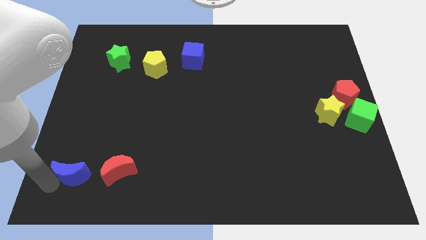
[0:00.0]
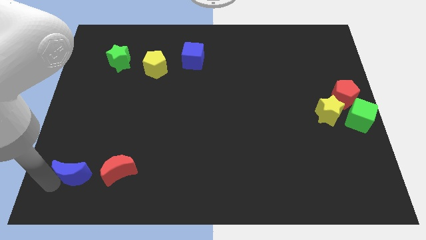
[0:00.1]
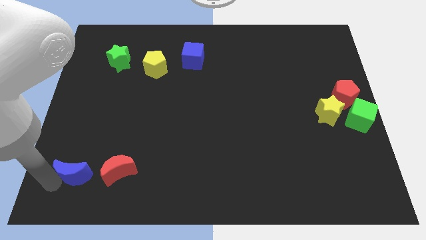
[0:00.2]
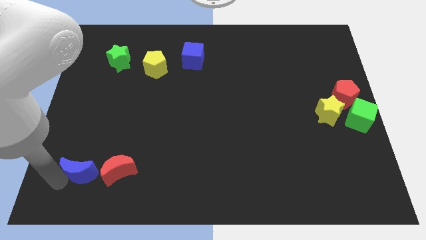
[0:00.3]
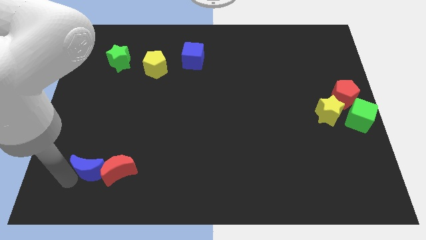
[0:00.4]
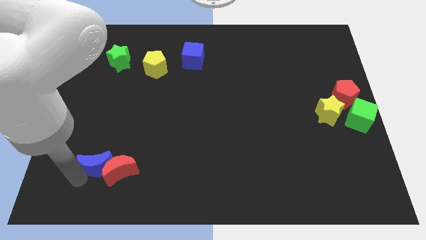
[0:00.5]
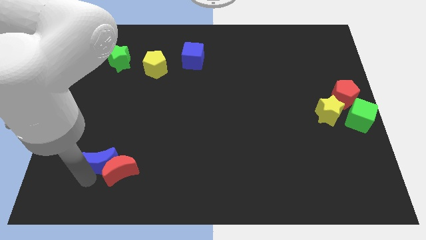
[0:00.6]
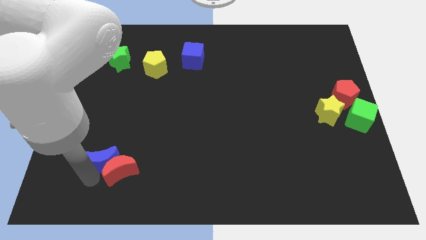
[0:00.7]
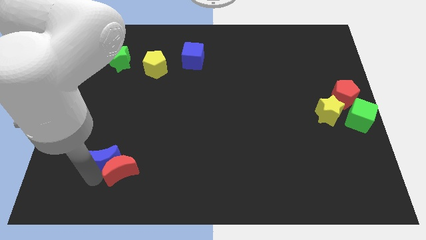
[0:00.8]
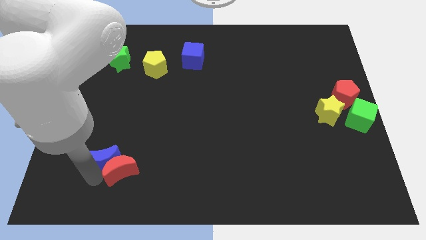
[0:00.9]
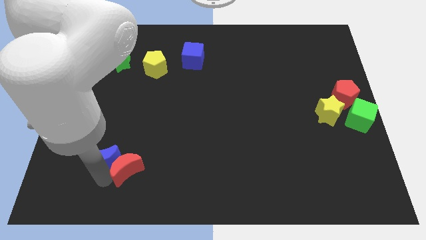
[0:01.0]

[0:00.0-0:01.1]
move the blue moon to the top side of the red moon

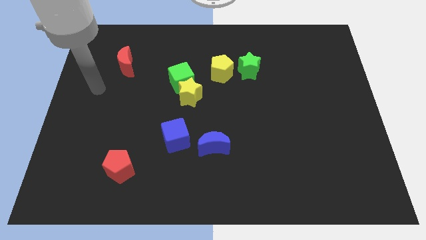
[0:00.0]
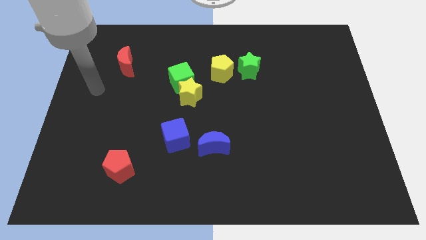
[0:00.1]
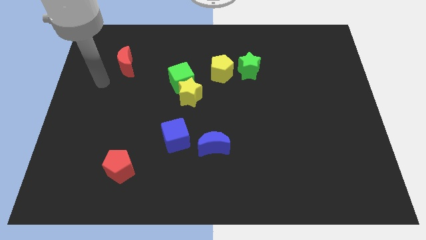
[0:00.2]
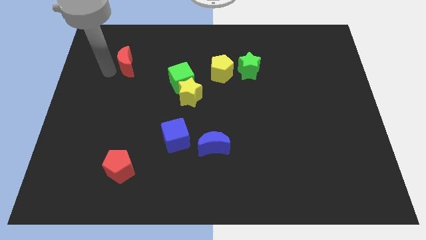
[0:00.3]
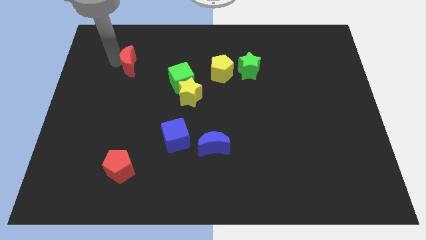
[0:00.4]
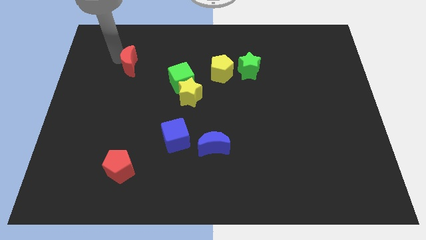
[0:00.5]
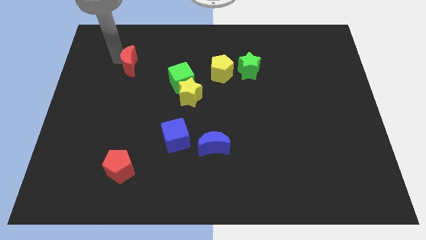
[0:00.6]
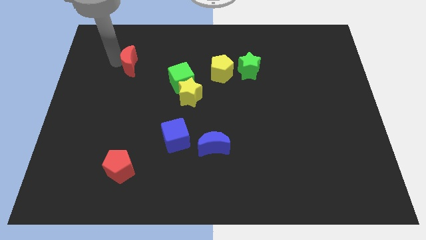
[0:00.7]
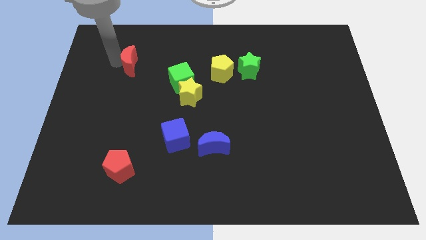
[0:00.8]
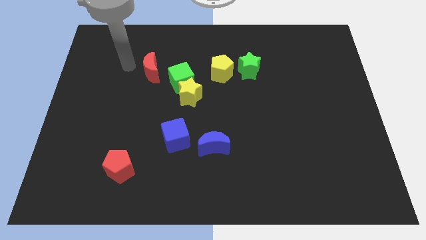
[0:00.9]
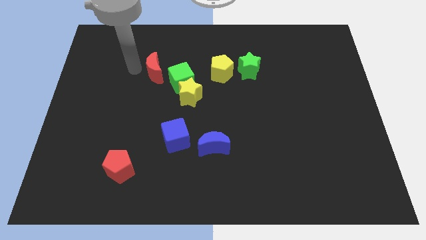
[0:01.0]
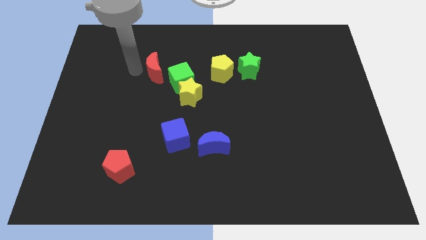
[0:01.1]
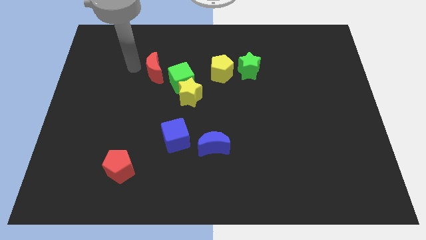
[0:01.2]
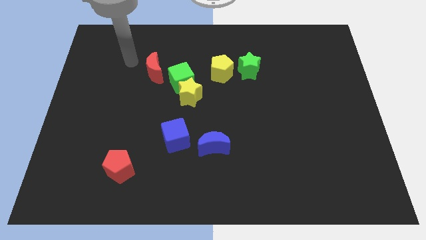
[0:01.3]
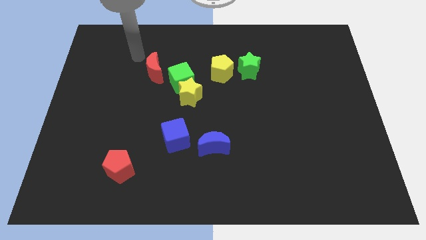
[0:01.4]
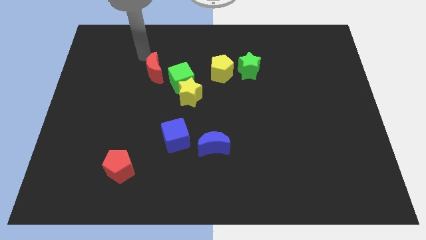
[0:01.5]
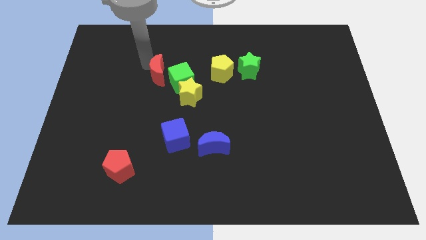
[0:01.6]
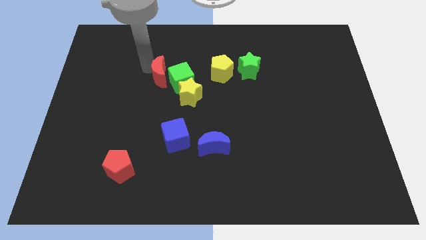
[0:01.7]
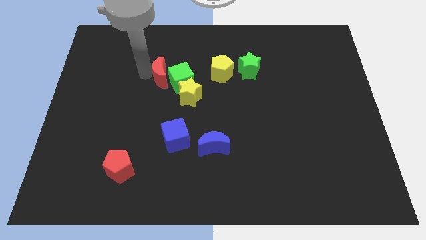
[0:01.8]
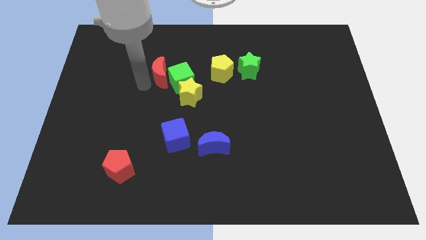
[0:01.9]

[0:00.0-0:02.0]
move the red crescent towards green cube

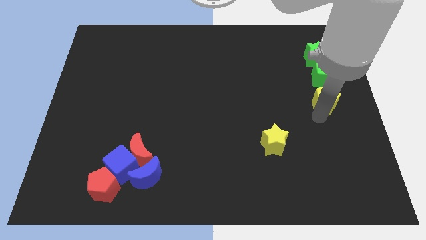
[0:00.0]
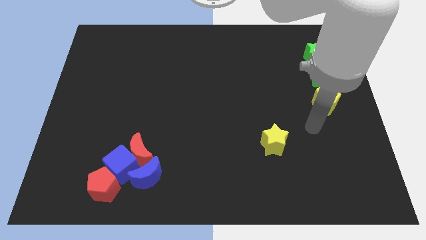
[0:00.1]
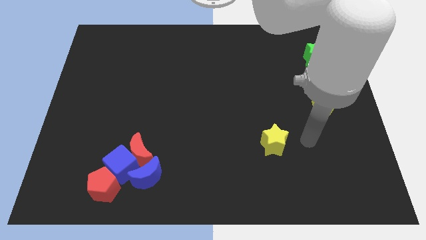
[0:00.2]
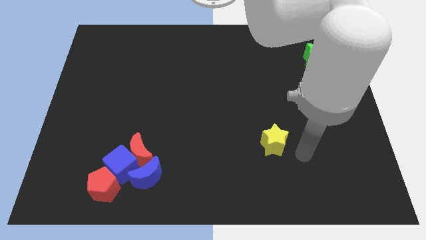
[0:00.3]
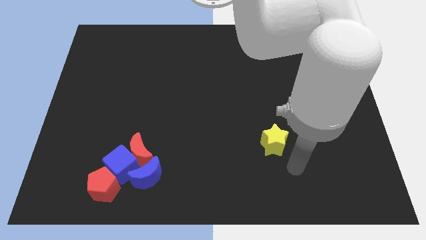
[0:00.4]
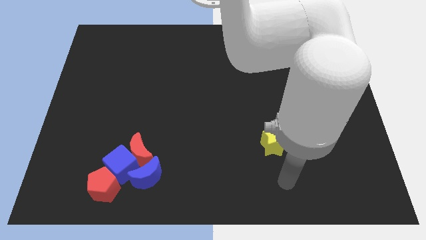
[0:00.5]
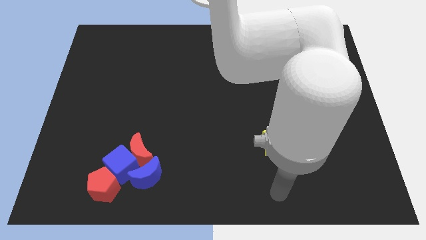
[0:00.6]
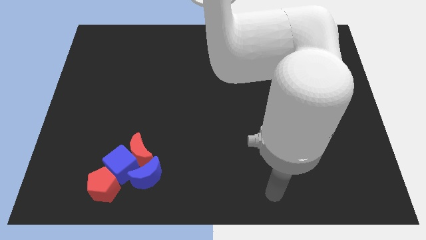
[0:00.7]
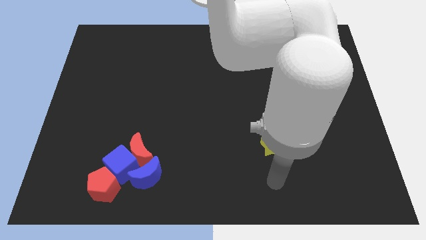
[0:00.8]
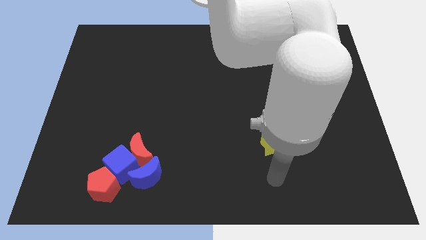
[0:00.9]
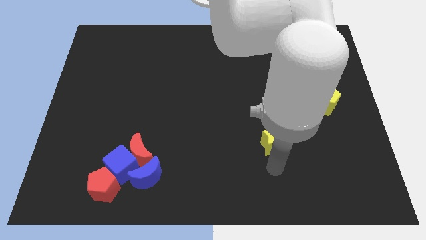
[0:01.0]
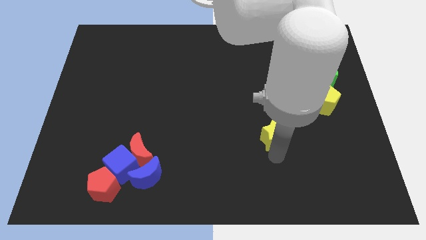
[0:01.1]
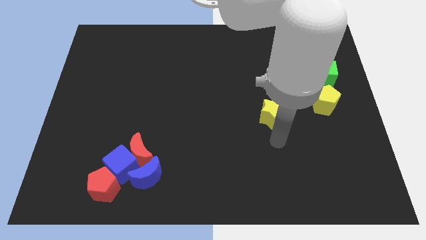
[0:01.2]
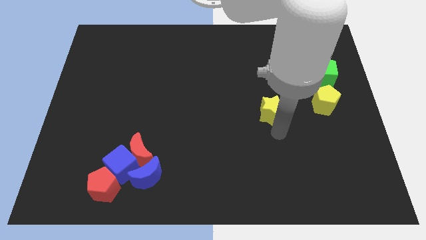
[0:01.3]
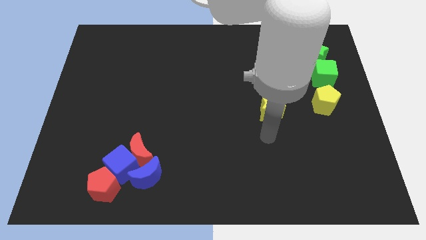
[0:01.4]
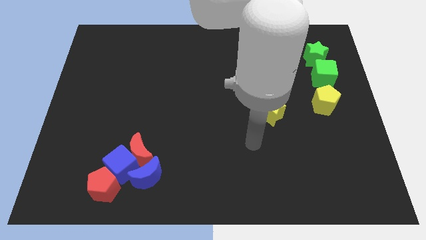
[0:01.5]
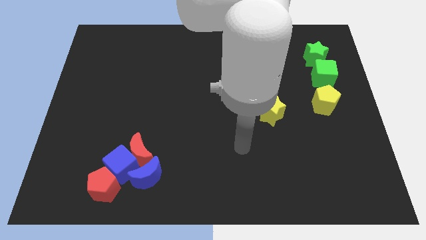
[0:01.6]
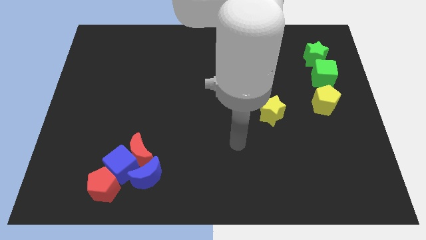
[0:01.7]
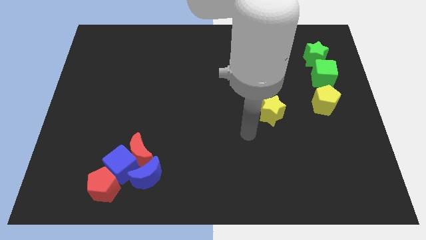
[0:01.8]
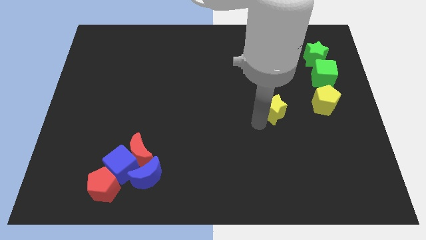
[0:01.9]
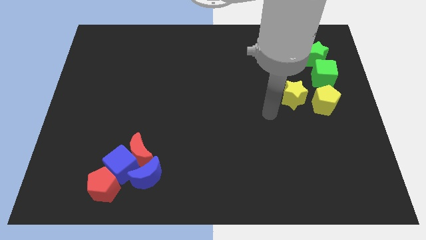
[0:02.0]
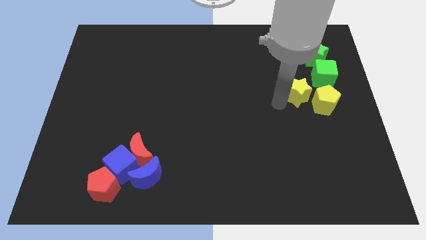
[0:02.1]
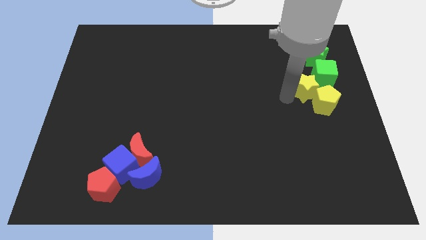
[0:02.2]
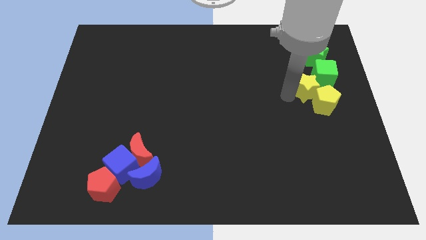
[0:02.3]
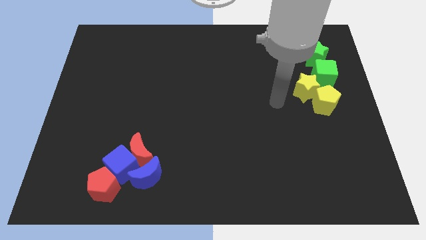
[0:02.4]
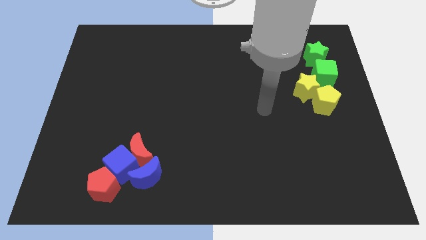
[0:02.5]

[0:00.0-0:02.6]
push the yellow star into the green cube

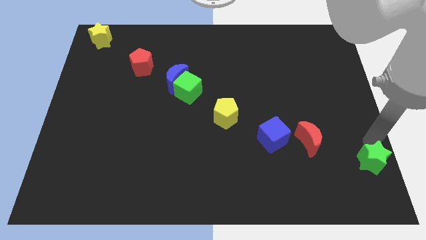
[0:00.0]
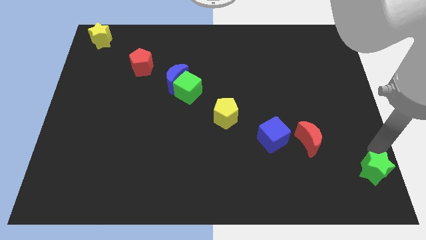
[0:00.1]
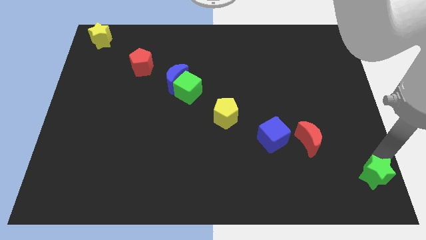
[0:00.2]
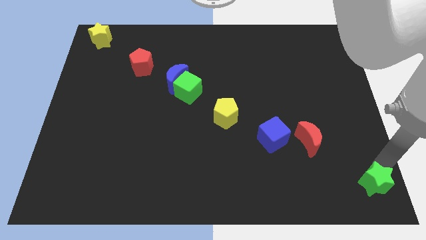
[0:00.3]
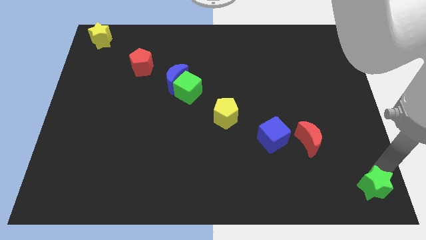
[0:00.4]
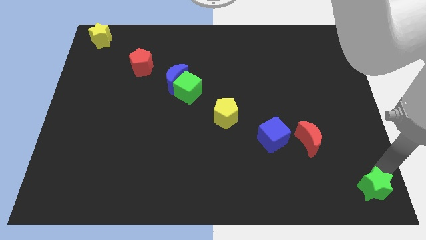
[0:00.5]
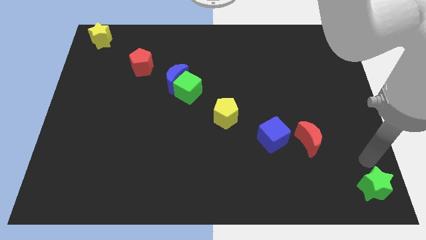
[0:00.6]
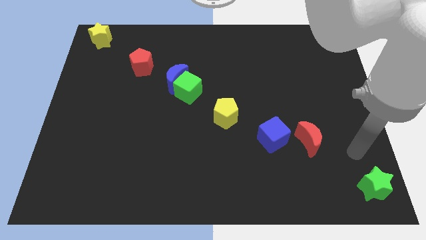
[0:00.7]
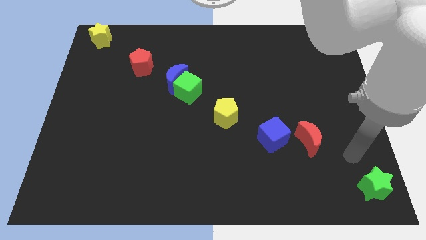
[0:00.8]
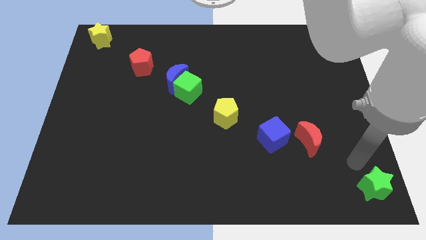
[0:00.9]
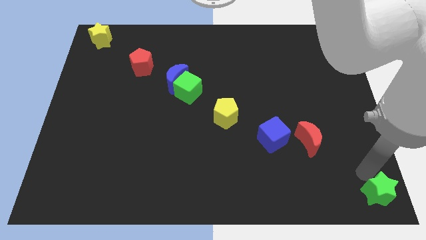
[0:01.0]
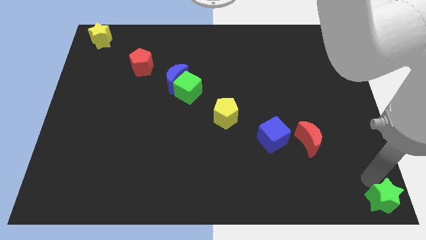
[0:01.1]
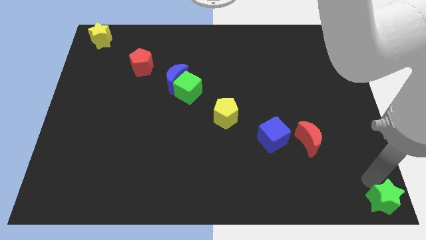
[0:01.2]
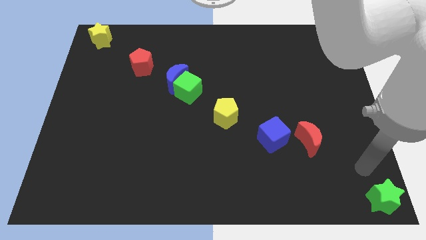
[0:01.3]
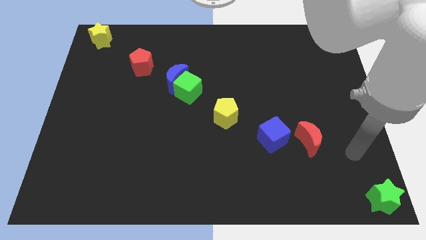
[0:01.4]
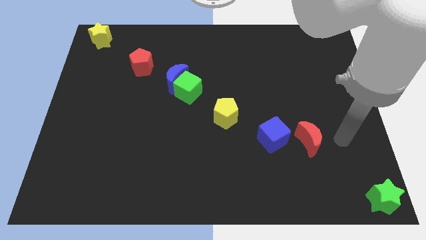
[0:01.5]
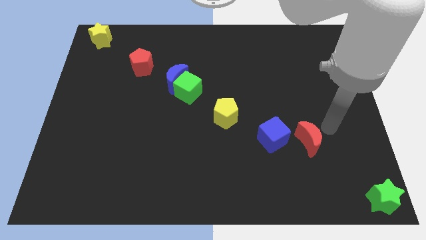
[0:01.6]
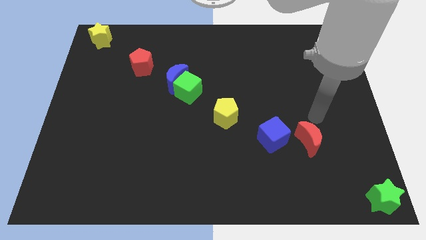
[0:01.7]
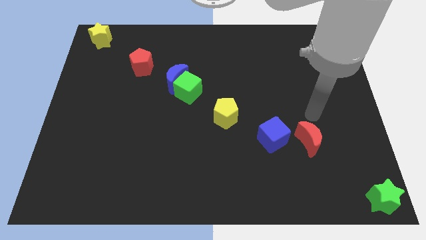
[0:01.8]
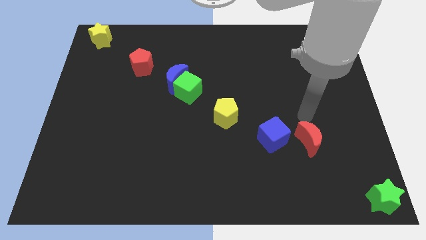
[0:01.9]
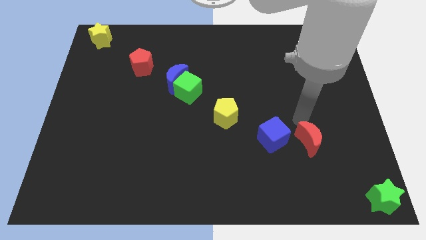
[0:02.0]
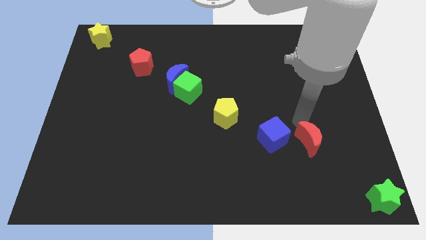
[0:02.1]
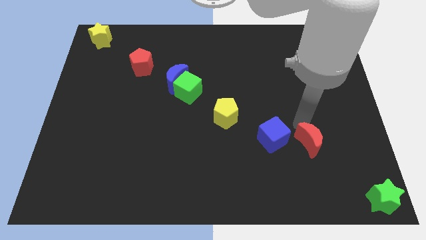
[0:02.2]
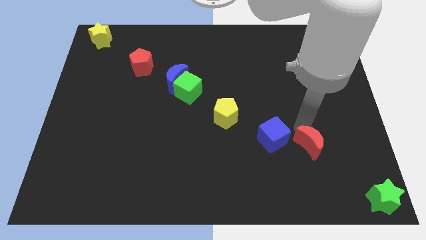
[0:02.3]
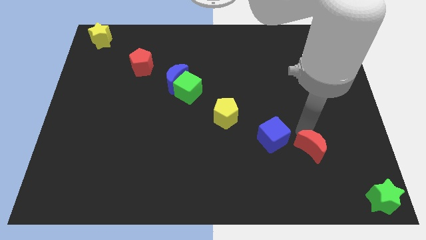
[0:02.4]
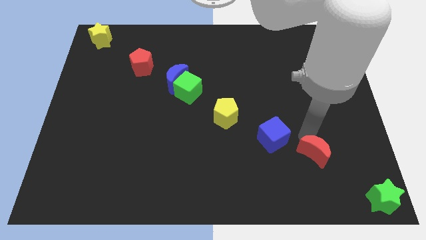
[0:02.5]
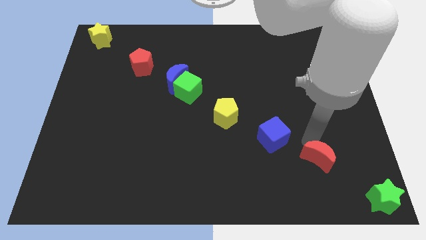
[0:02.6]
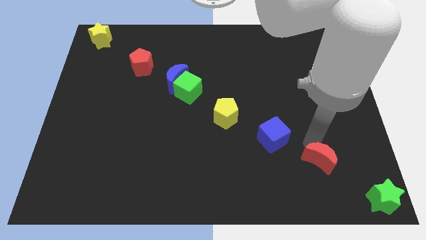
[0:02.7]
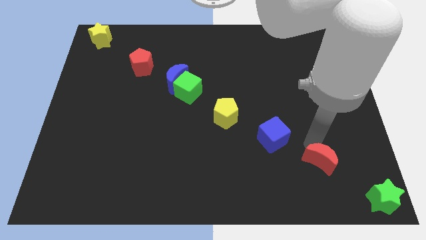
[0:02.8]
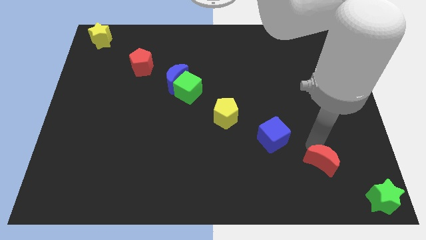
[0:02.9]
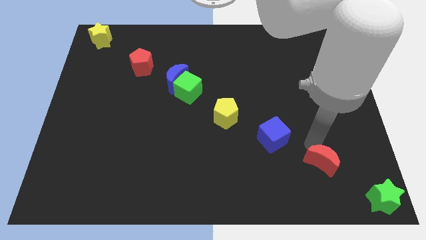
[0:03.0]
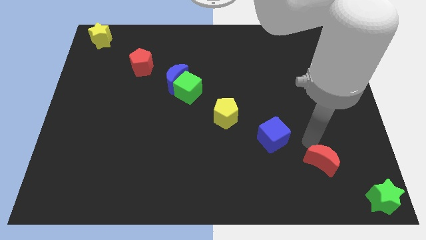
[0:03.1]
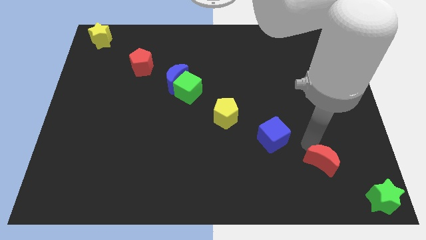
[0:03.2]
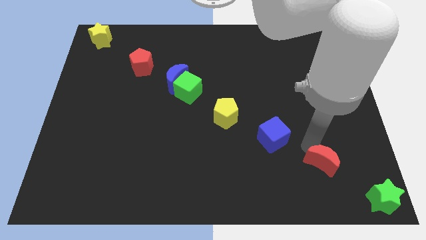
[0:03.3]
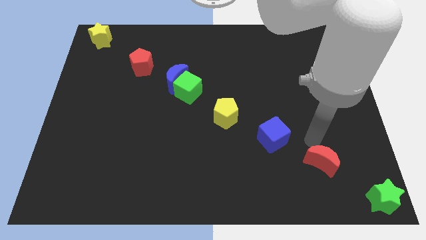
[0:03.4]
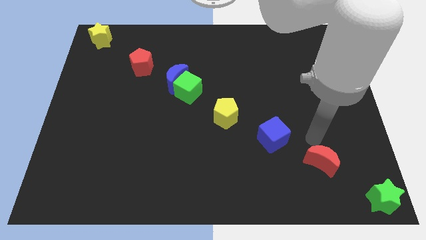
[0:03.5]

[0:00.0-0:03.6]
adjust green star and the red moon to form a diagonal line out of all blocks
